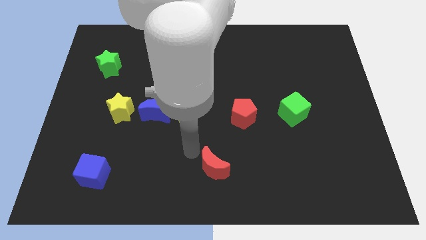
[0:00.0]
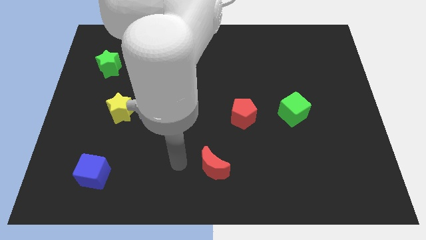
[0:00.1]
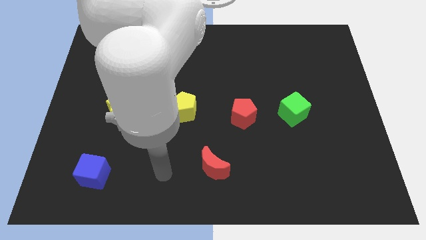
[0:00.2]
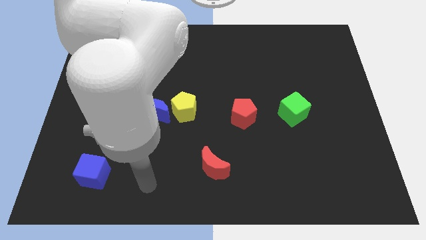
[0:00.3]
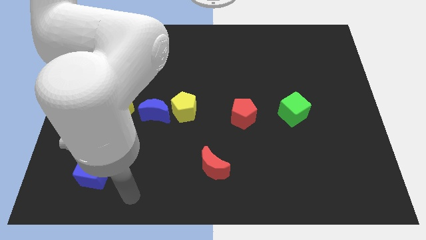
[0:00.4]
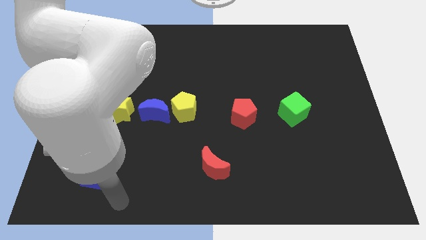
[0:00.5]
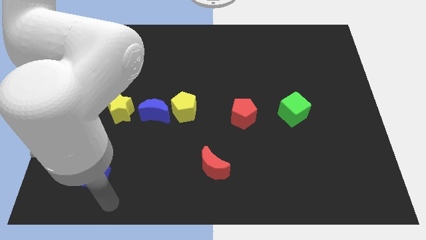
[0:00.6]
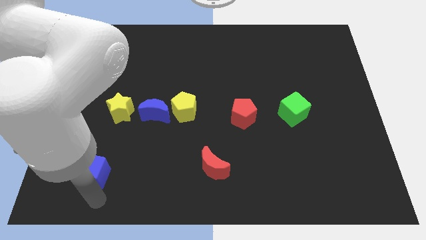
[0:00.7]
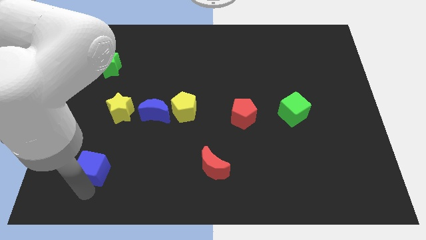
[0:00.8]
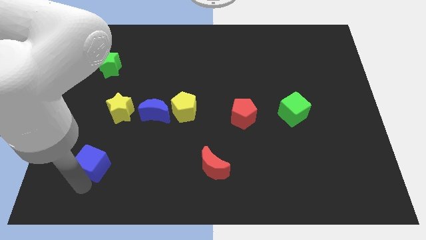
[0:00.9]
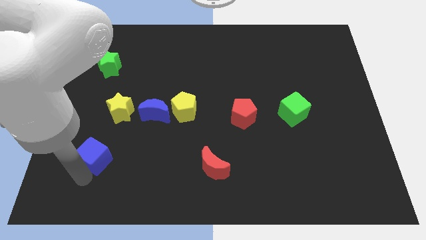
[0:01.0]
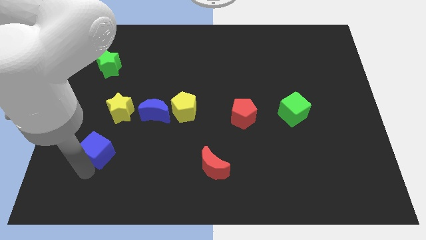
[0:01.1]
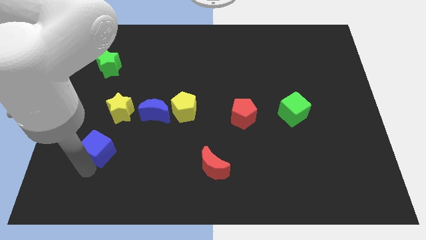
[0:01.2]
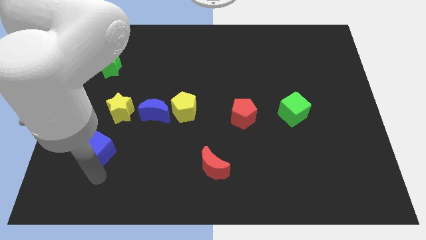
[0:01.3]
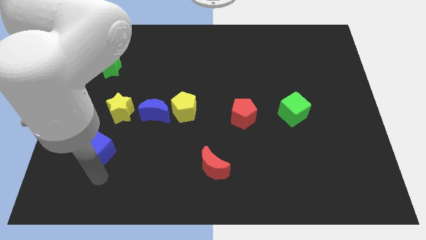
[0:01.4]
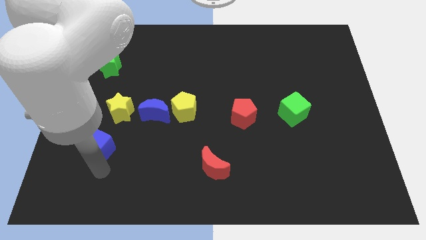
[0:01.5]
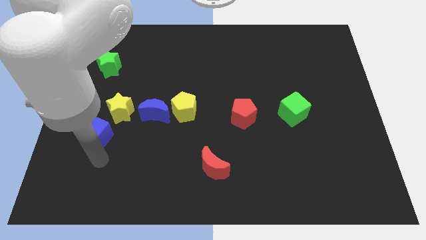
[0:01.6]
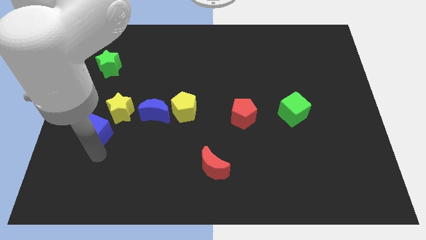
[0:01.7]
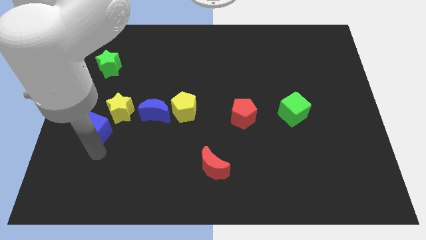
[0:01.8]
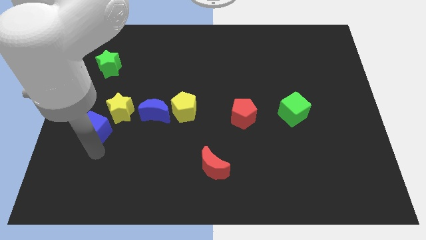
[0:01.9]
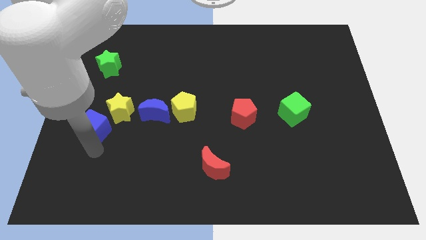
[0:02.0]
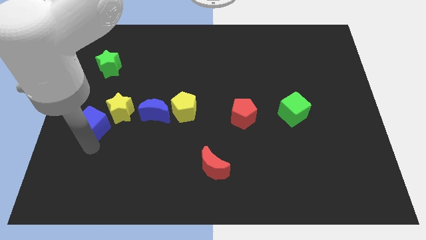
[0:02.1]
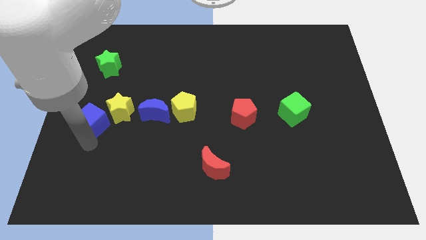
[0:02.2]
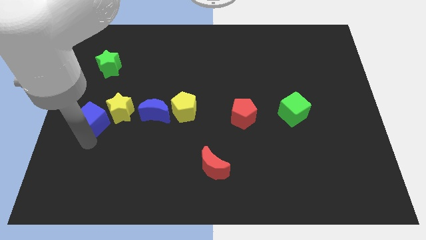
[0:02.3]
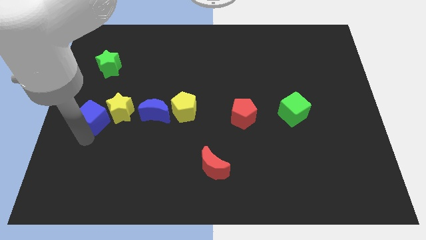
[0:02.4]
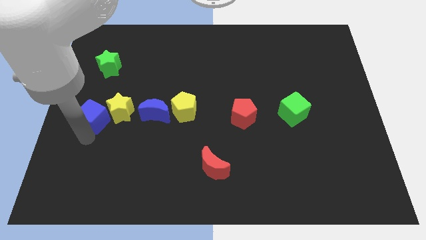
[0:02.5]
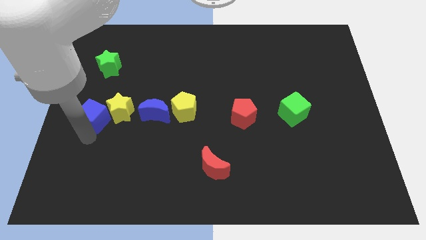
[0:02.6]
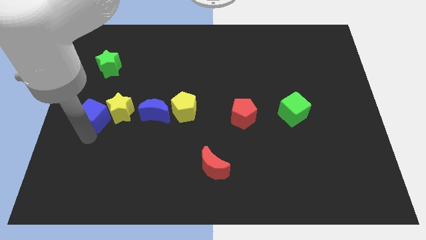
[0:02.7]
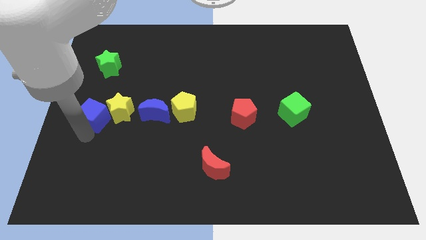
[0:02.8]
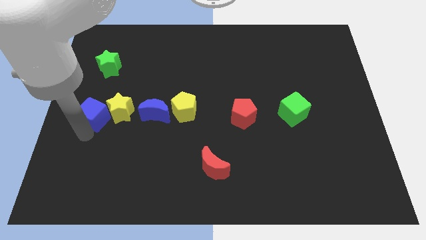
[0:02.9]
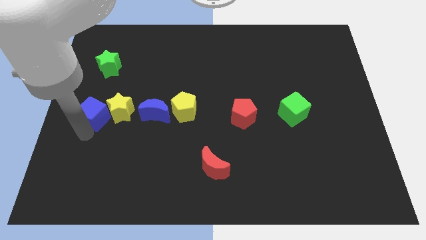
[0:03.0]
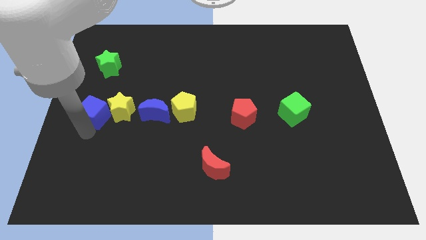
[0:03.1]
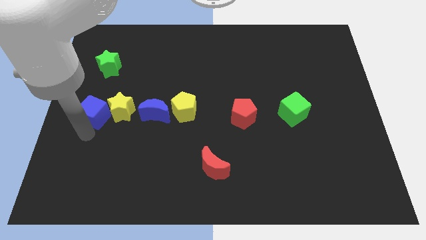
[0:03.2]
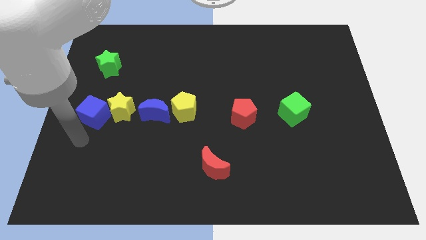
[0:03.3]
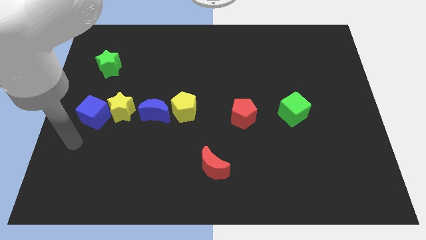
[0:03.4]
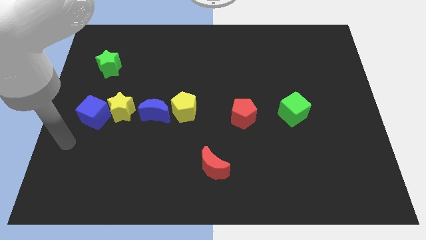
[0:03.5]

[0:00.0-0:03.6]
push the blue cube to the left of the yellow star

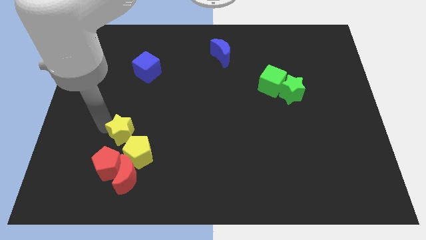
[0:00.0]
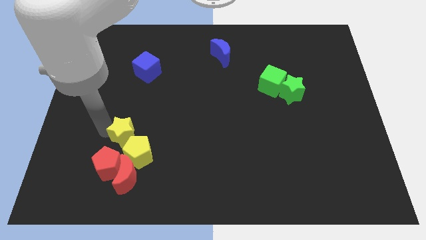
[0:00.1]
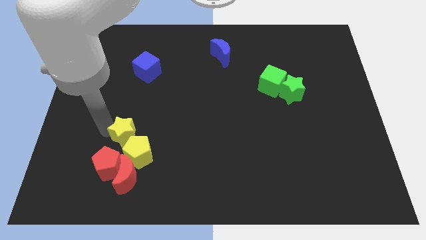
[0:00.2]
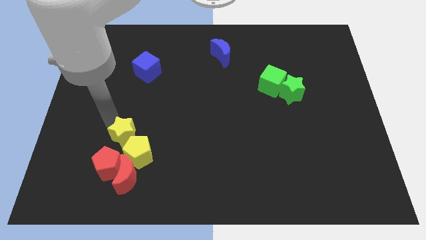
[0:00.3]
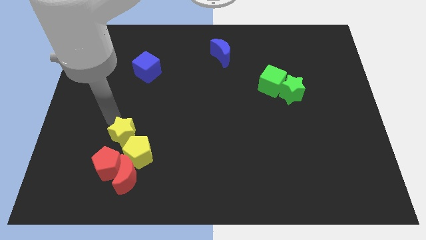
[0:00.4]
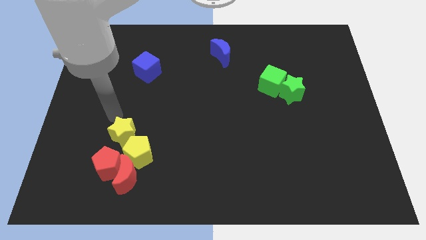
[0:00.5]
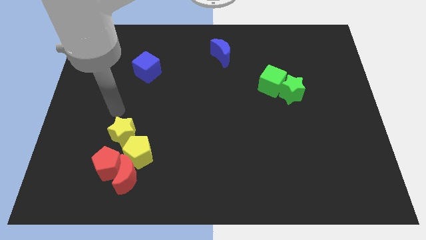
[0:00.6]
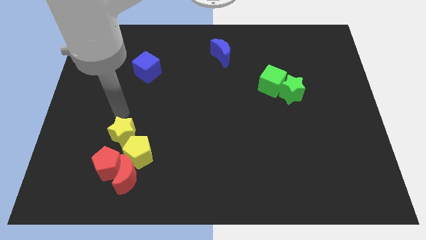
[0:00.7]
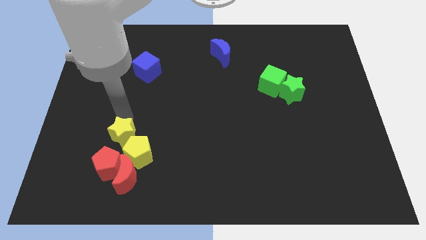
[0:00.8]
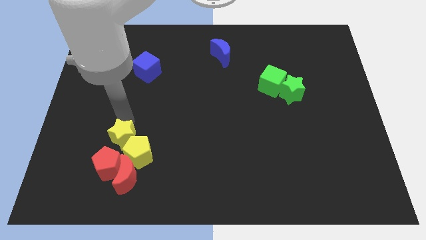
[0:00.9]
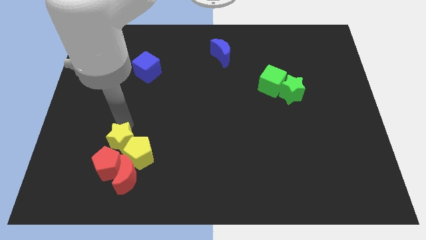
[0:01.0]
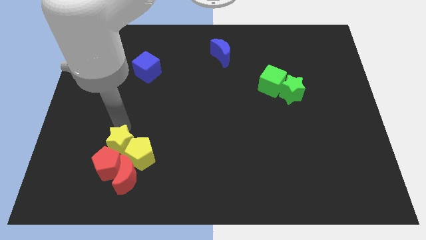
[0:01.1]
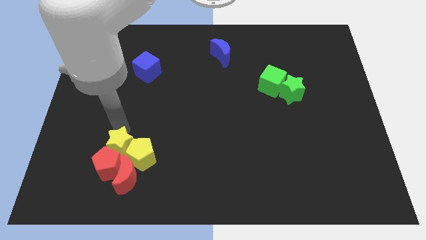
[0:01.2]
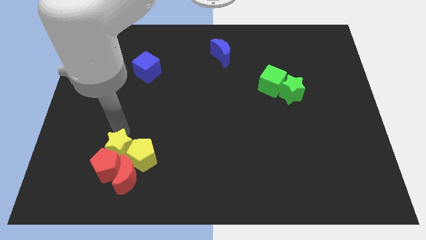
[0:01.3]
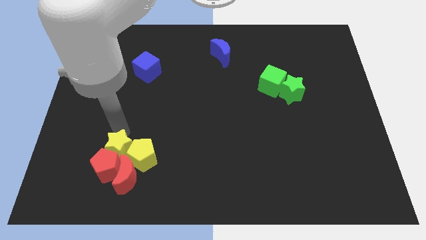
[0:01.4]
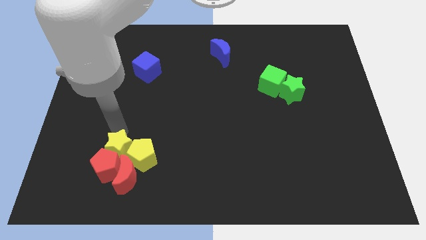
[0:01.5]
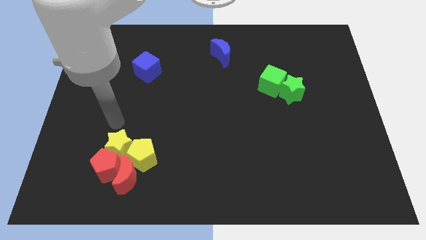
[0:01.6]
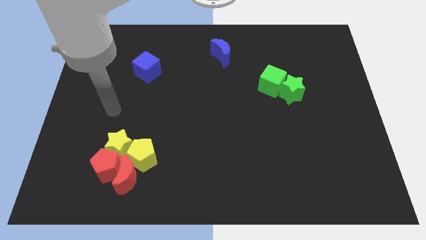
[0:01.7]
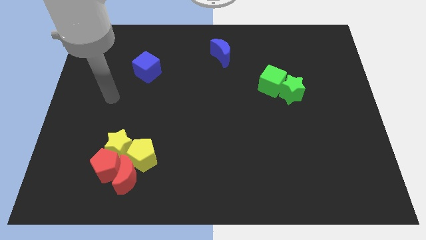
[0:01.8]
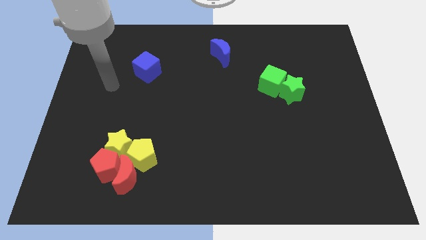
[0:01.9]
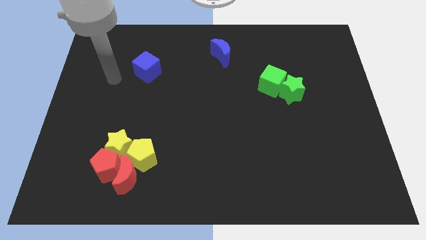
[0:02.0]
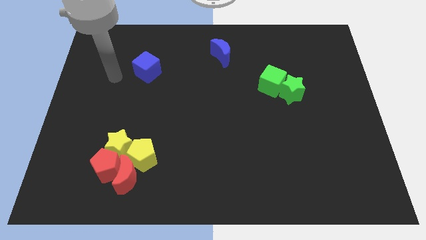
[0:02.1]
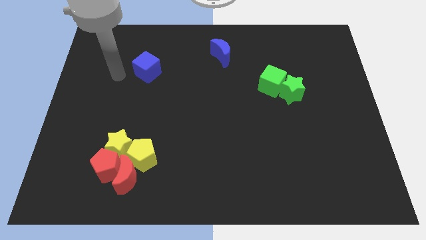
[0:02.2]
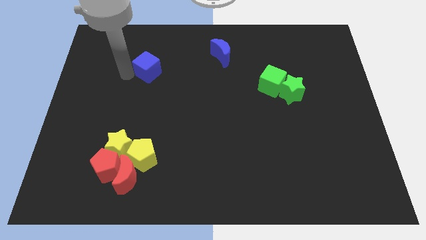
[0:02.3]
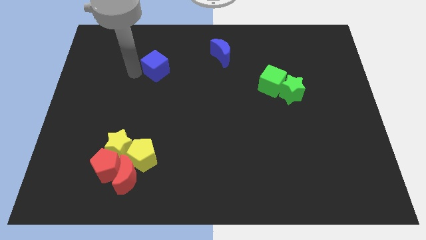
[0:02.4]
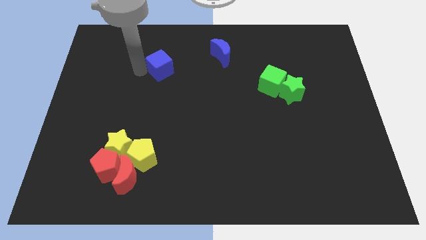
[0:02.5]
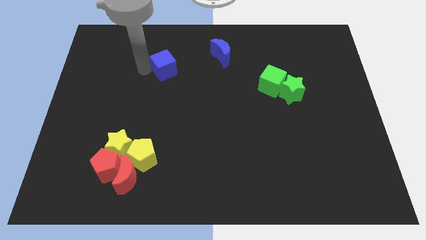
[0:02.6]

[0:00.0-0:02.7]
move the red and yellow blocks slightly down

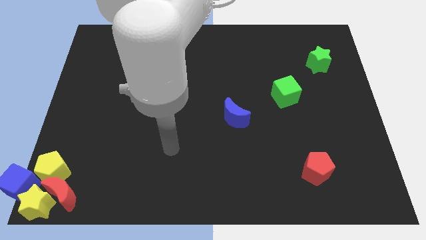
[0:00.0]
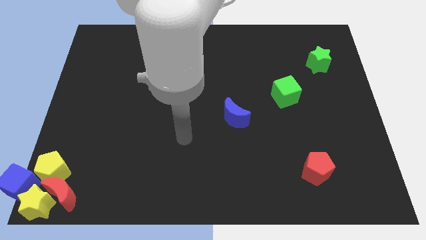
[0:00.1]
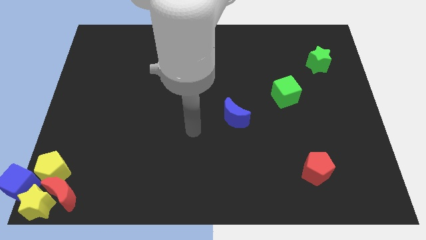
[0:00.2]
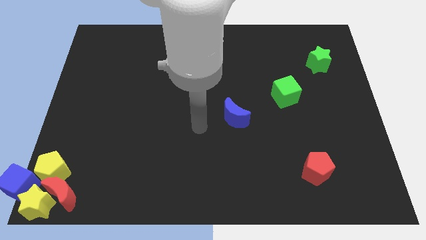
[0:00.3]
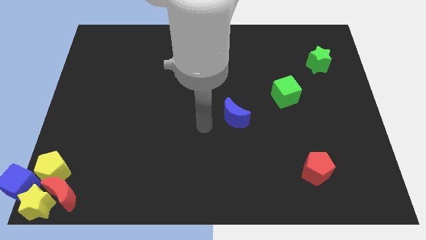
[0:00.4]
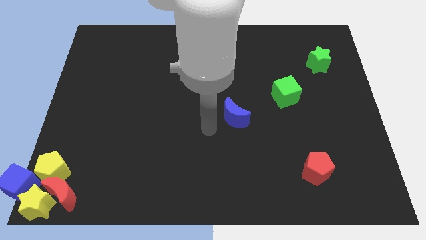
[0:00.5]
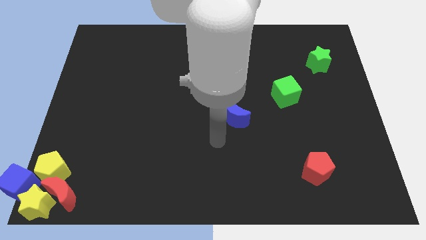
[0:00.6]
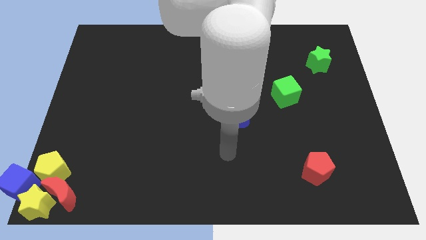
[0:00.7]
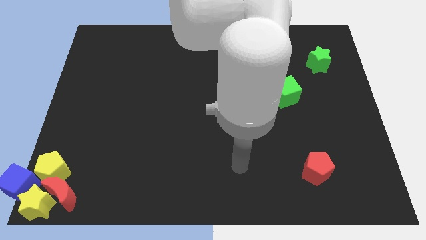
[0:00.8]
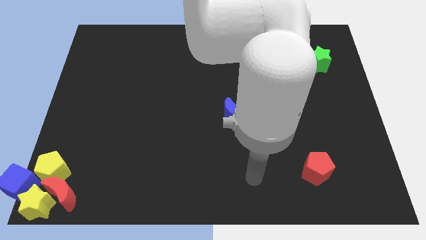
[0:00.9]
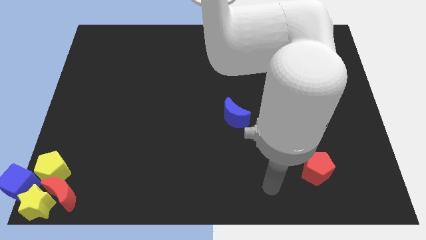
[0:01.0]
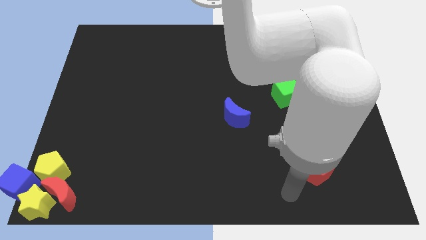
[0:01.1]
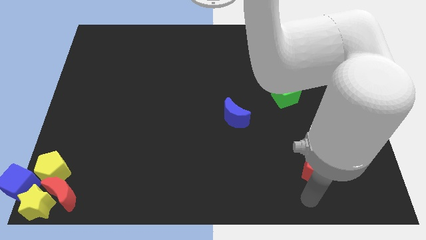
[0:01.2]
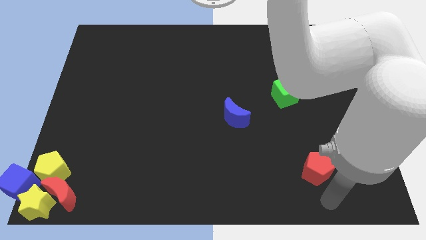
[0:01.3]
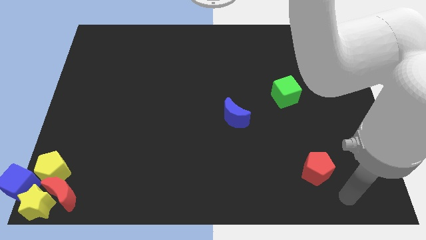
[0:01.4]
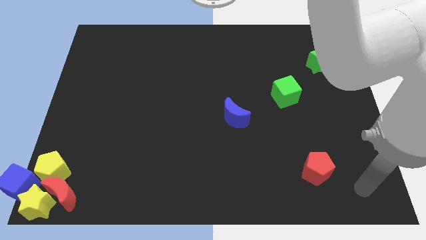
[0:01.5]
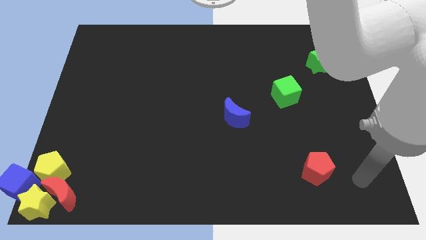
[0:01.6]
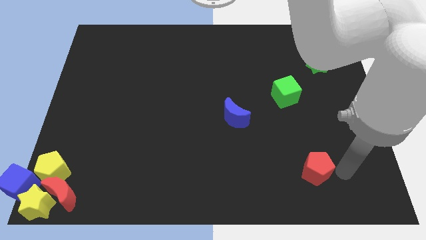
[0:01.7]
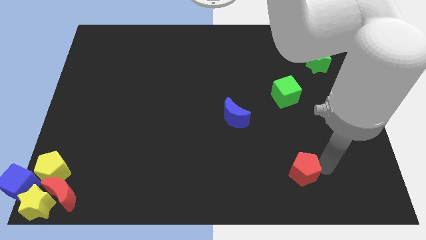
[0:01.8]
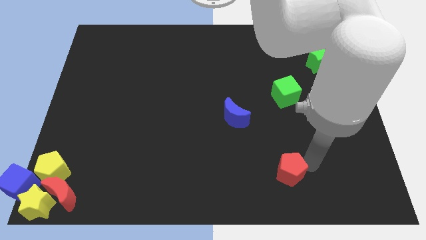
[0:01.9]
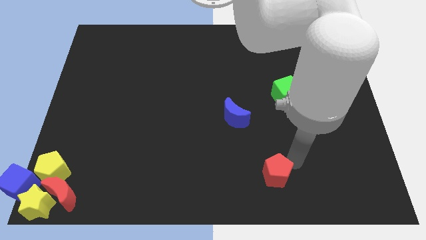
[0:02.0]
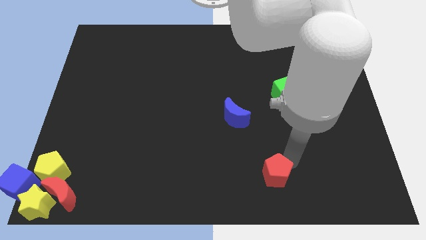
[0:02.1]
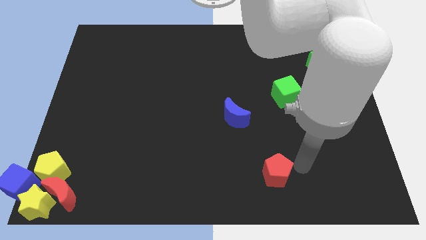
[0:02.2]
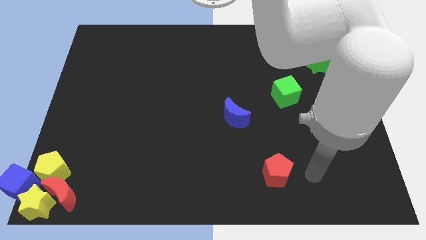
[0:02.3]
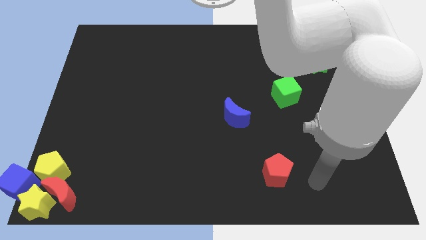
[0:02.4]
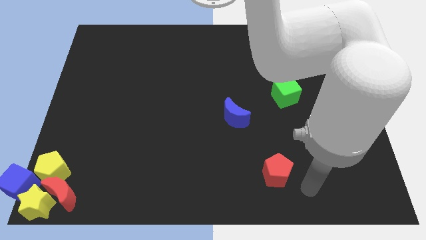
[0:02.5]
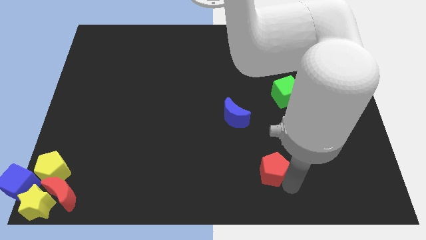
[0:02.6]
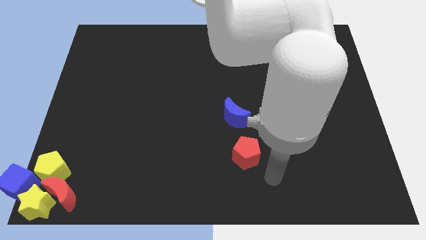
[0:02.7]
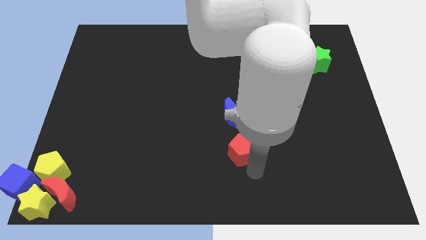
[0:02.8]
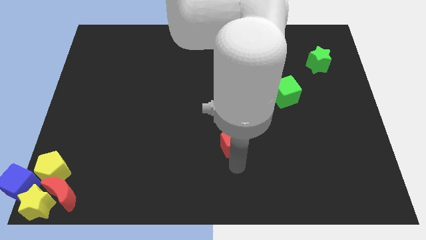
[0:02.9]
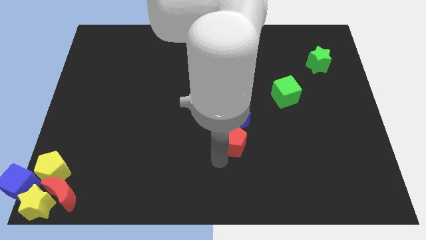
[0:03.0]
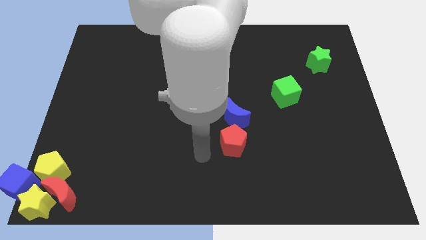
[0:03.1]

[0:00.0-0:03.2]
move red pentagon below the blue moon
